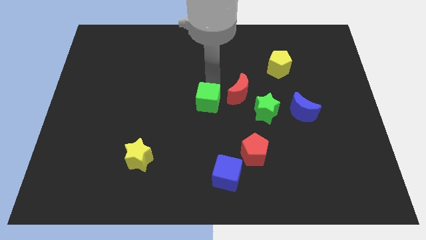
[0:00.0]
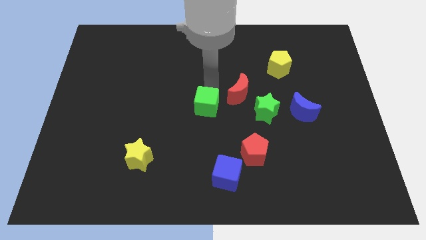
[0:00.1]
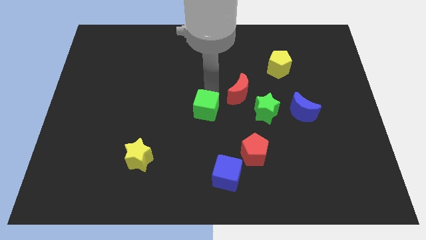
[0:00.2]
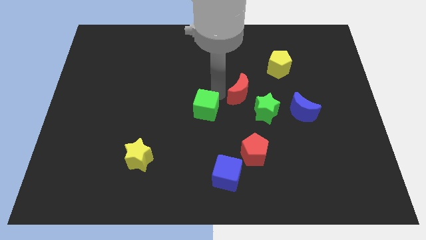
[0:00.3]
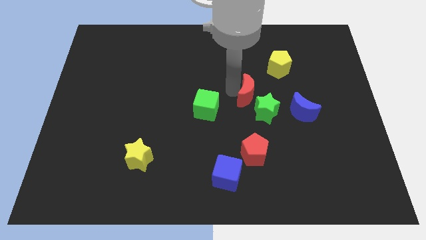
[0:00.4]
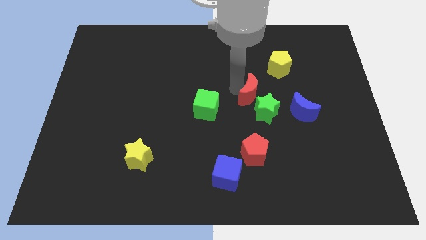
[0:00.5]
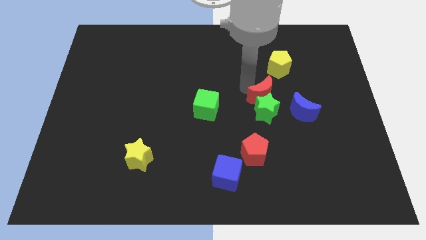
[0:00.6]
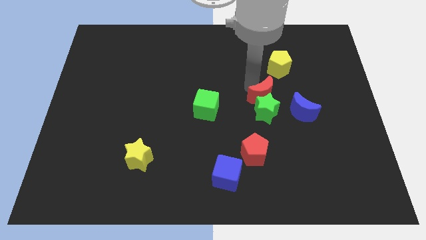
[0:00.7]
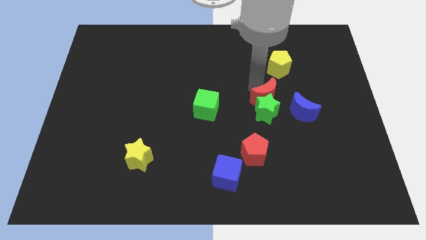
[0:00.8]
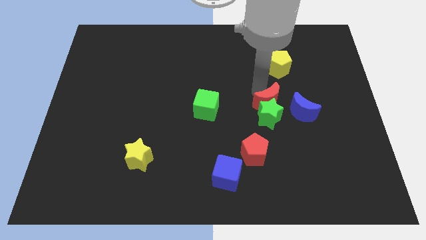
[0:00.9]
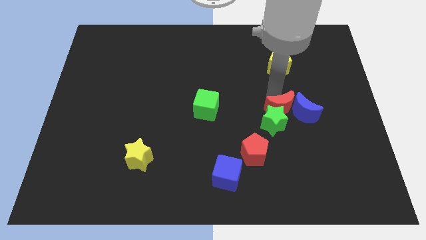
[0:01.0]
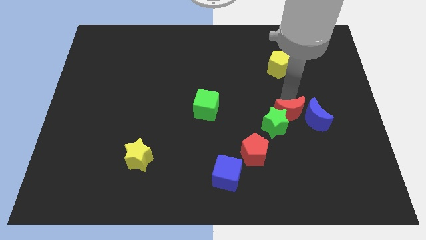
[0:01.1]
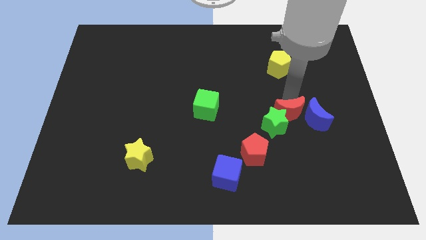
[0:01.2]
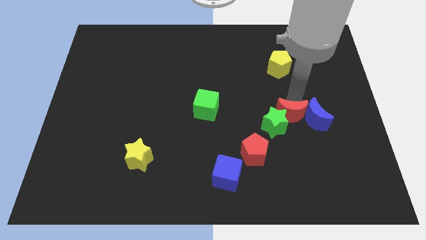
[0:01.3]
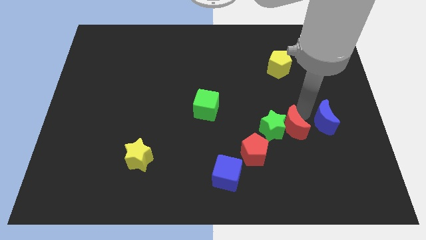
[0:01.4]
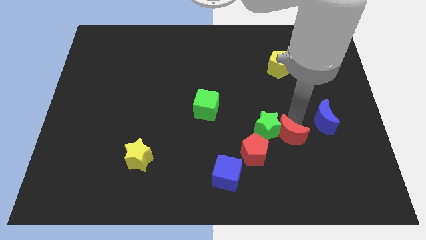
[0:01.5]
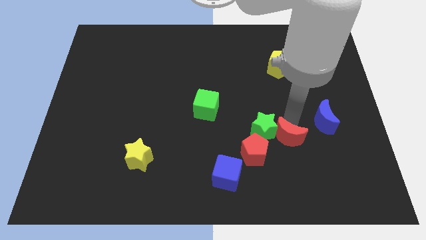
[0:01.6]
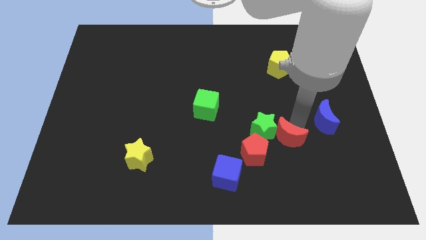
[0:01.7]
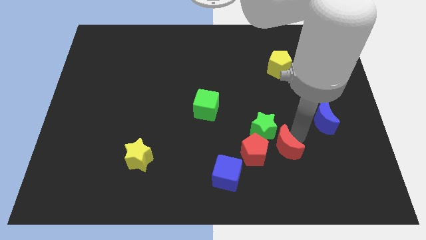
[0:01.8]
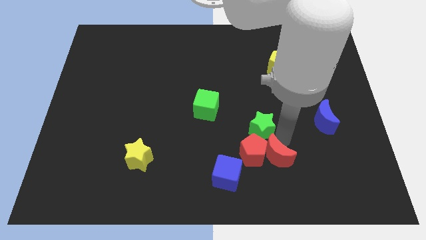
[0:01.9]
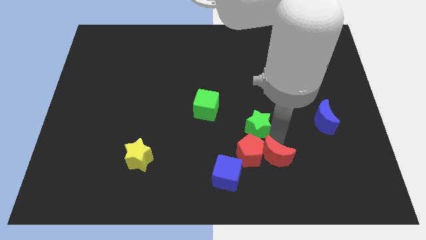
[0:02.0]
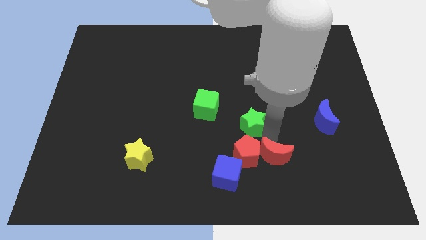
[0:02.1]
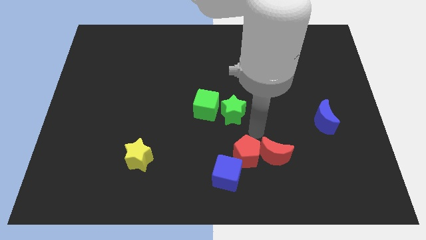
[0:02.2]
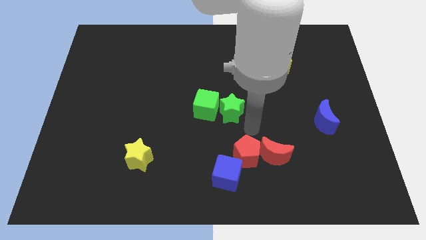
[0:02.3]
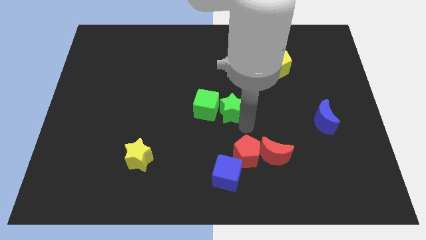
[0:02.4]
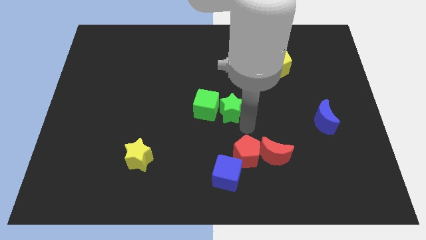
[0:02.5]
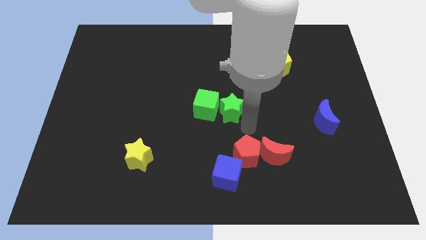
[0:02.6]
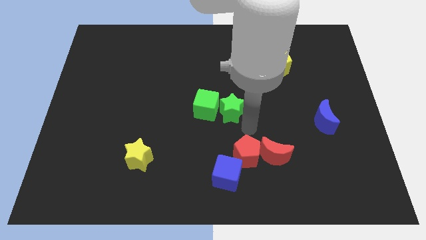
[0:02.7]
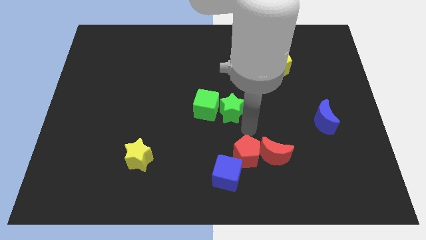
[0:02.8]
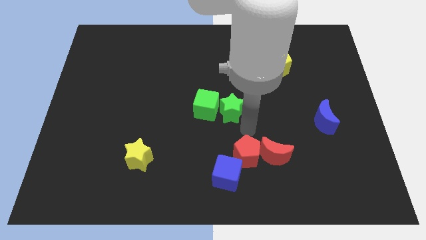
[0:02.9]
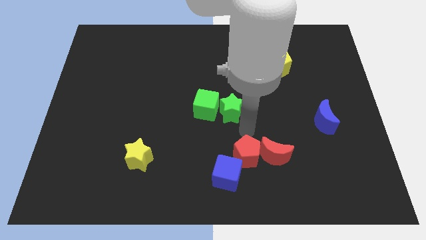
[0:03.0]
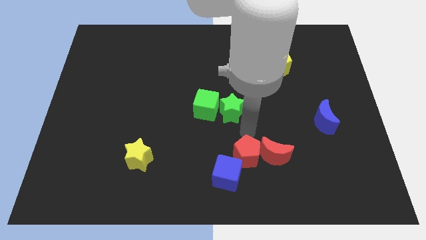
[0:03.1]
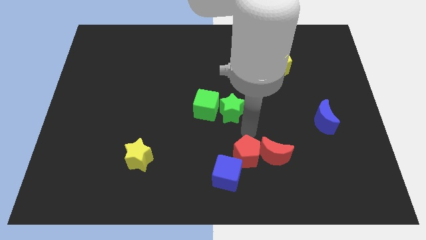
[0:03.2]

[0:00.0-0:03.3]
push green star beside green cube

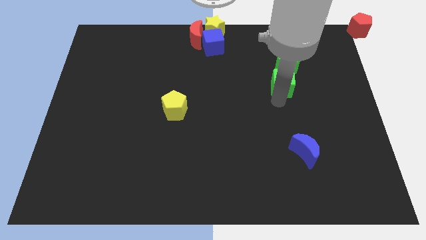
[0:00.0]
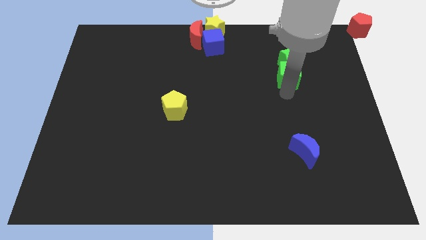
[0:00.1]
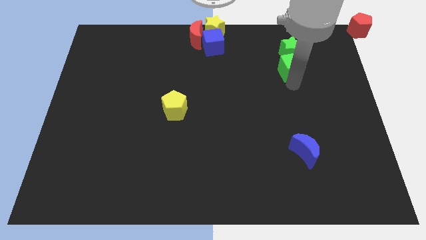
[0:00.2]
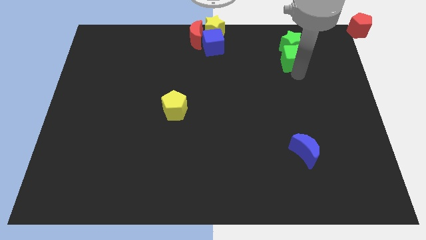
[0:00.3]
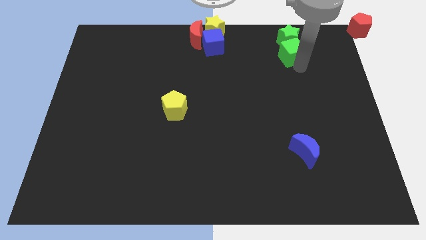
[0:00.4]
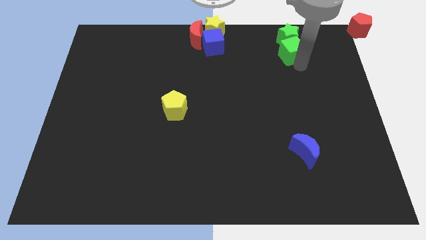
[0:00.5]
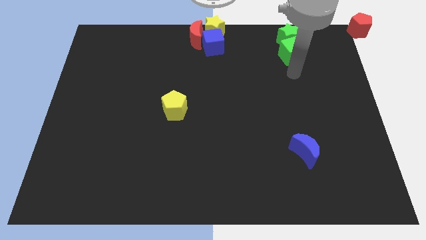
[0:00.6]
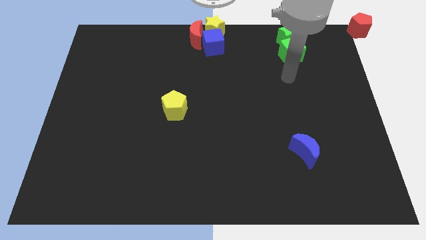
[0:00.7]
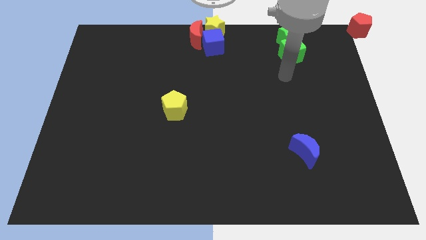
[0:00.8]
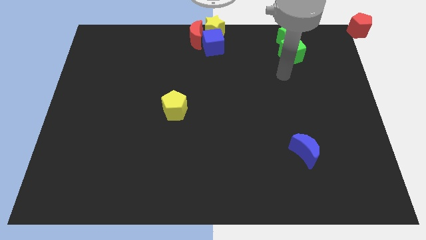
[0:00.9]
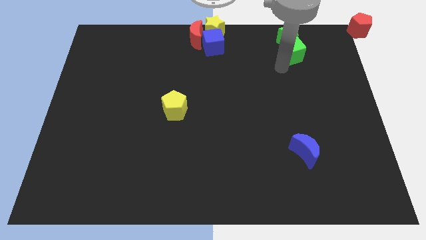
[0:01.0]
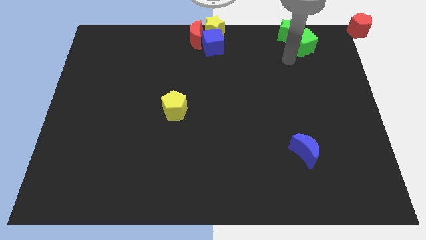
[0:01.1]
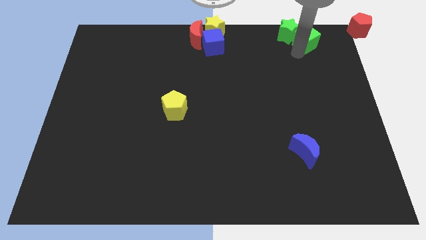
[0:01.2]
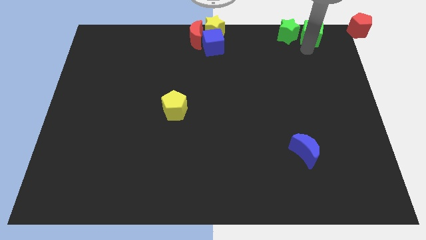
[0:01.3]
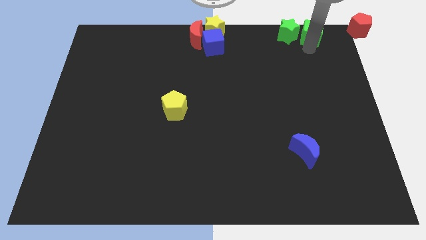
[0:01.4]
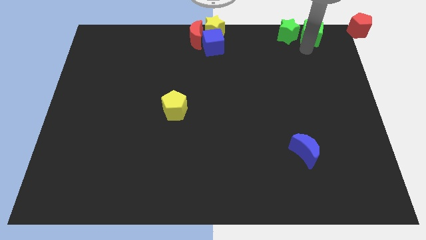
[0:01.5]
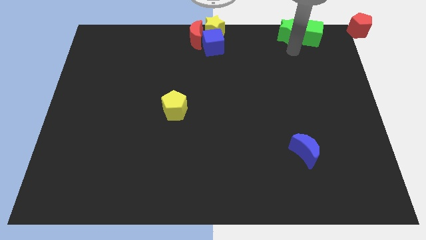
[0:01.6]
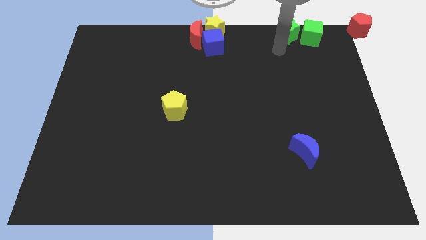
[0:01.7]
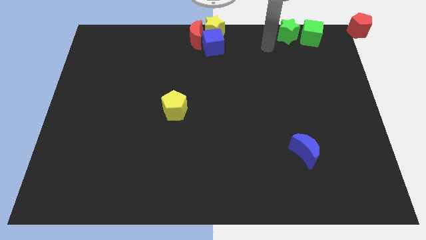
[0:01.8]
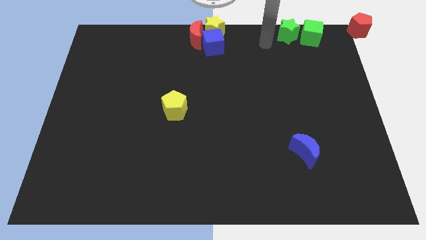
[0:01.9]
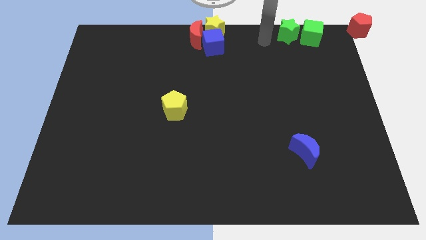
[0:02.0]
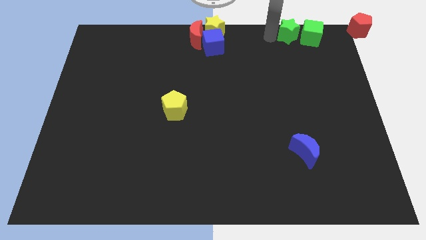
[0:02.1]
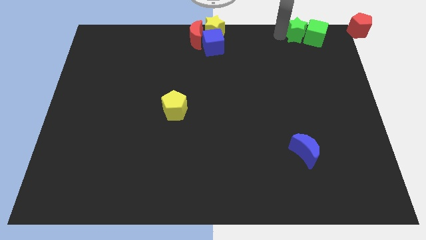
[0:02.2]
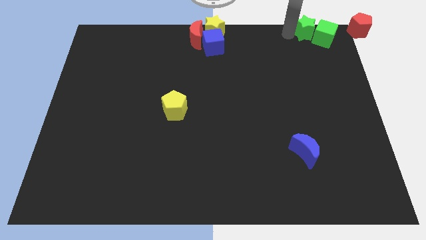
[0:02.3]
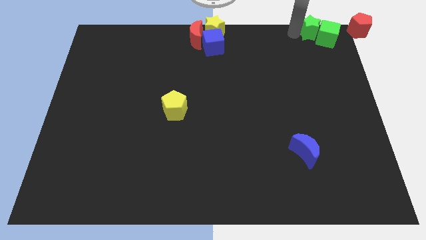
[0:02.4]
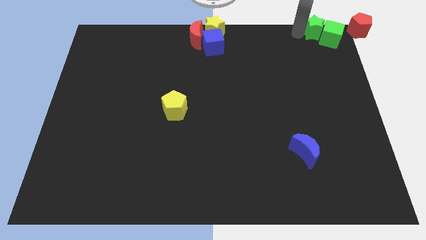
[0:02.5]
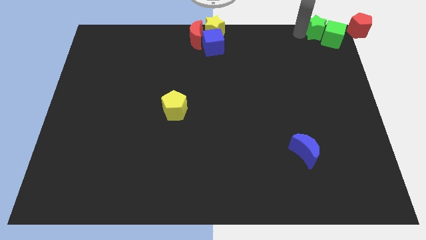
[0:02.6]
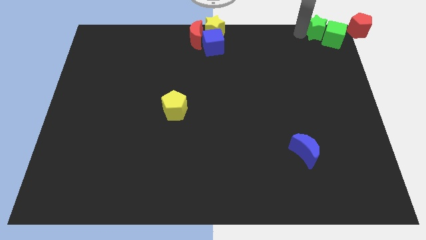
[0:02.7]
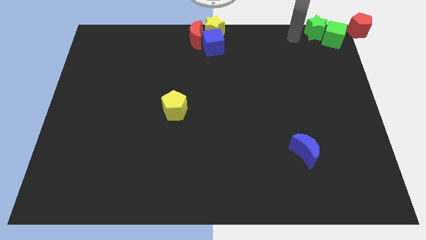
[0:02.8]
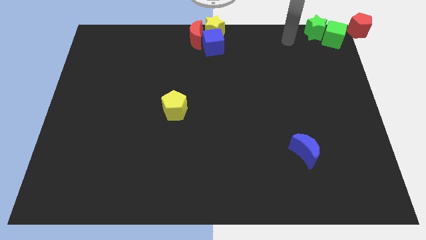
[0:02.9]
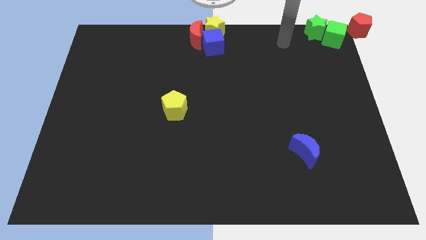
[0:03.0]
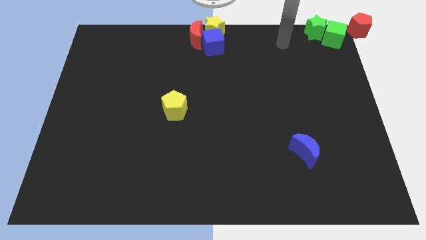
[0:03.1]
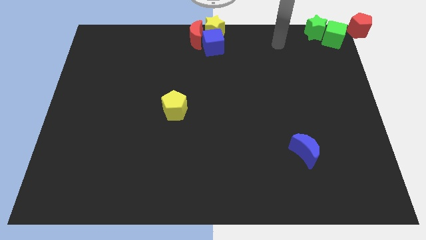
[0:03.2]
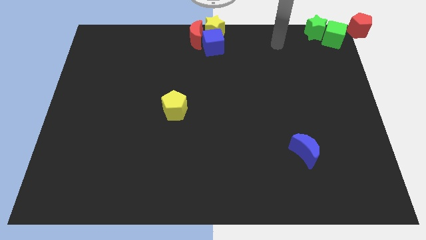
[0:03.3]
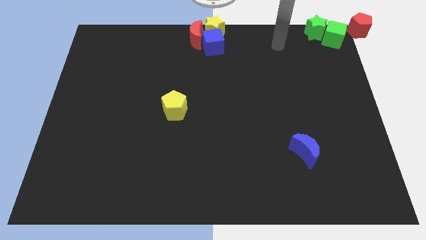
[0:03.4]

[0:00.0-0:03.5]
move green star and green cube together towards red pentagon

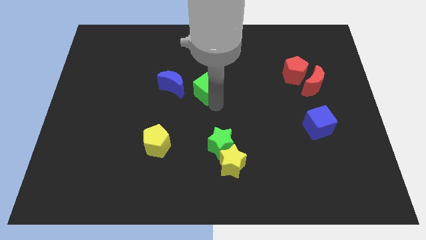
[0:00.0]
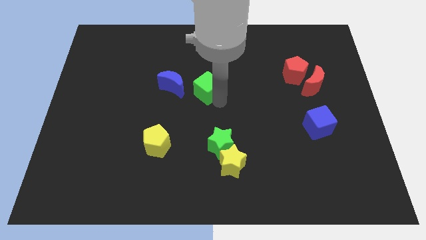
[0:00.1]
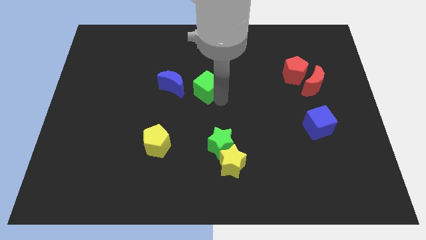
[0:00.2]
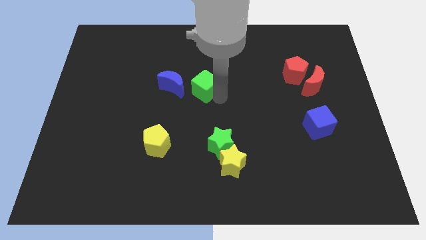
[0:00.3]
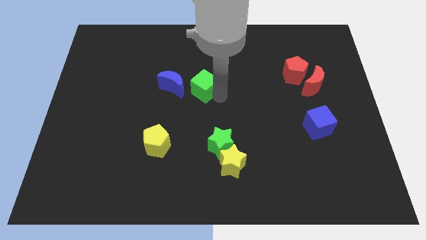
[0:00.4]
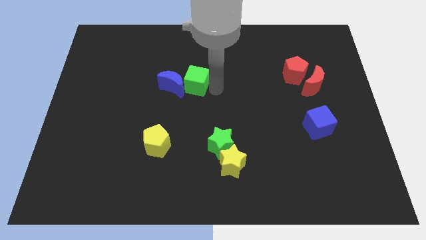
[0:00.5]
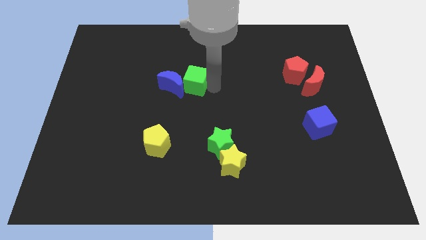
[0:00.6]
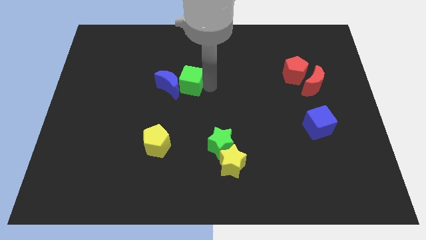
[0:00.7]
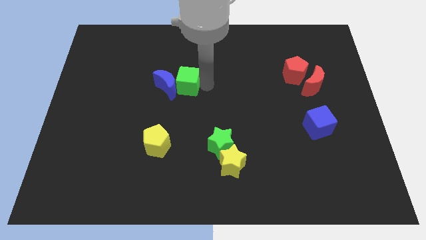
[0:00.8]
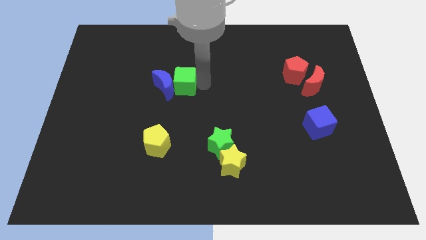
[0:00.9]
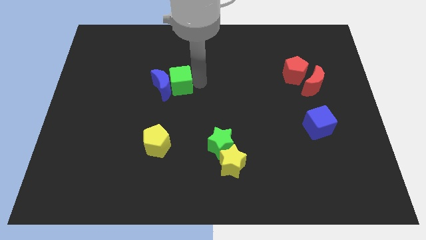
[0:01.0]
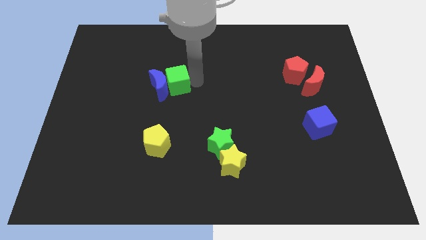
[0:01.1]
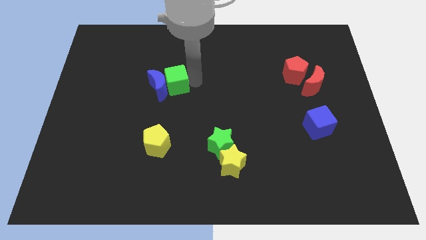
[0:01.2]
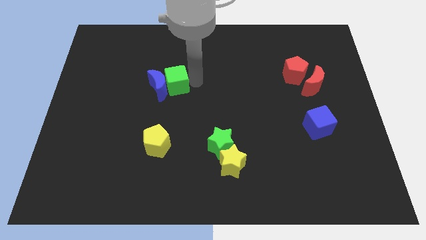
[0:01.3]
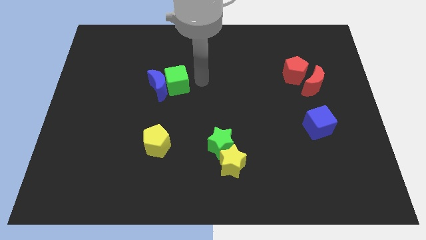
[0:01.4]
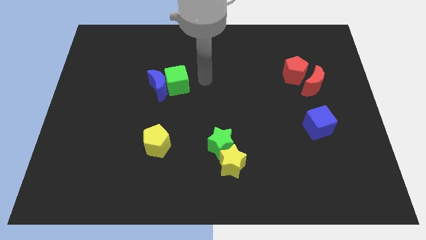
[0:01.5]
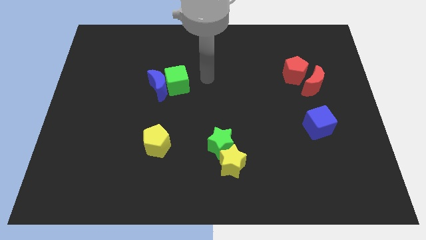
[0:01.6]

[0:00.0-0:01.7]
push the green cube into the blue crescent

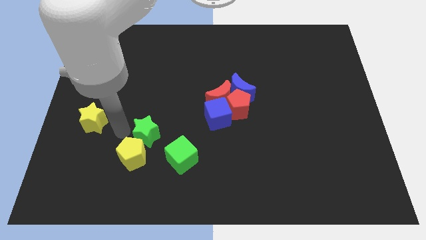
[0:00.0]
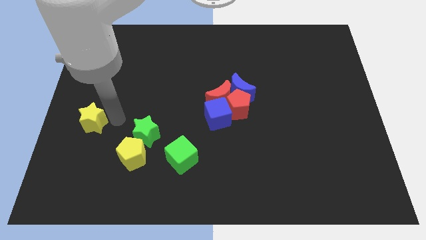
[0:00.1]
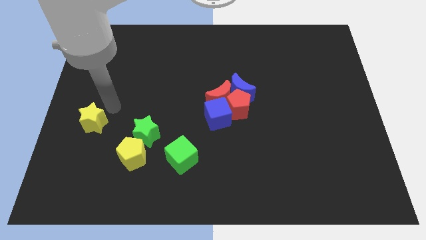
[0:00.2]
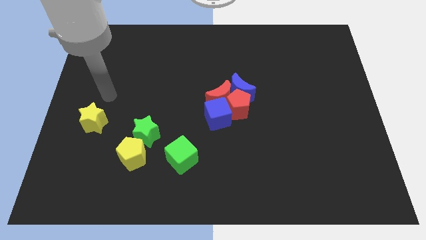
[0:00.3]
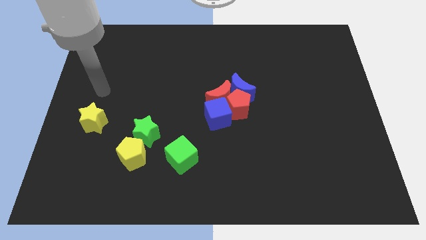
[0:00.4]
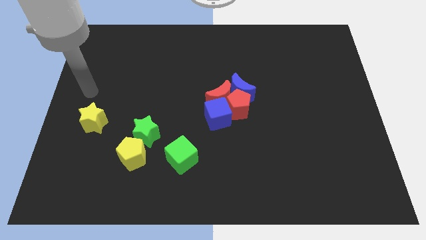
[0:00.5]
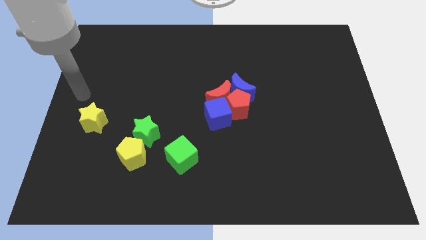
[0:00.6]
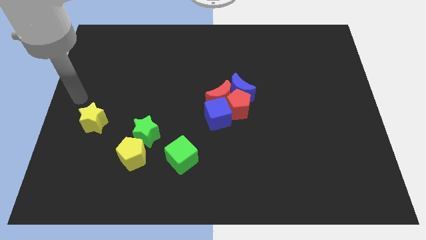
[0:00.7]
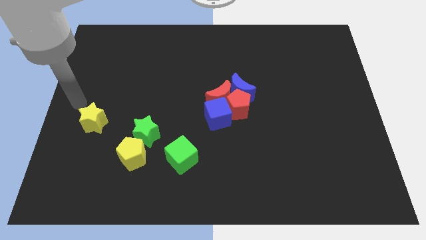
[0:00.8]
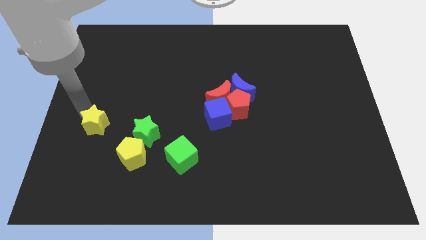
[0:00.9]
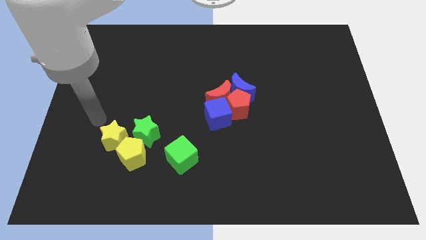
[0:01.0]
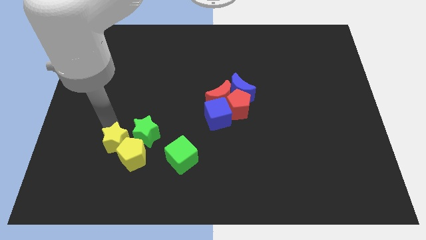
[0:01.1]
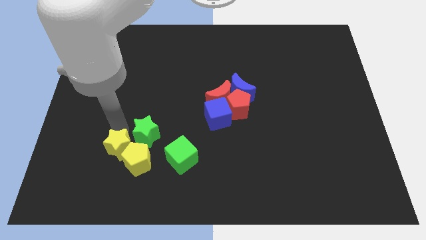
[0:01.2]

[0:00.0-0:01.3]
push the yellow star into the yellow pentagon
